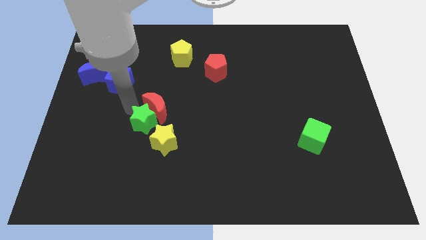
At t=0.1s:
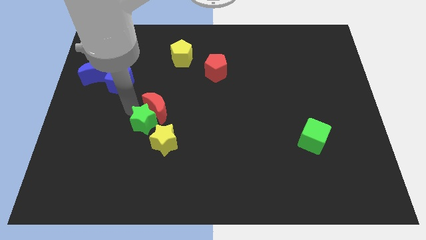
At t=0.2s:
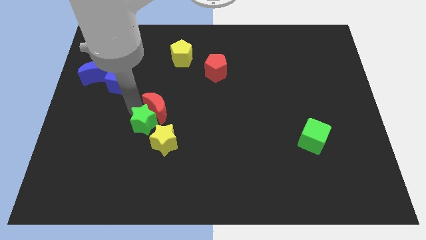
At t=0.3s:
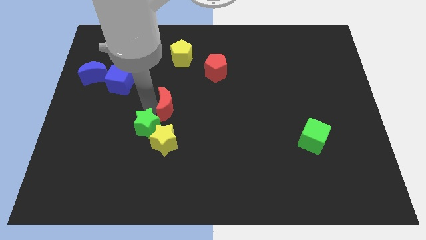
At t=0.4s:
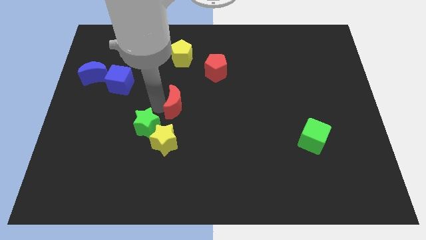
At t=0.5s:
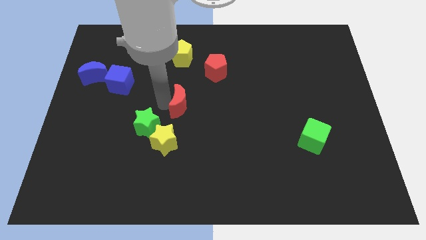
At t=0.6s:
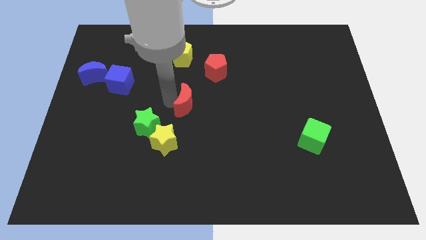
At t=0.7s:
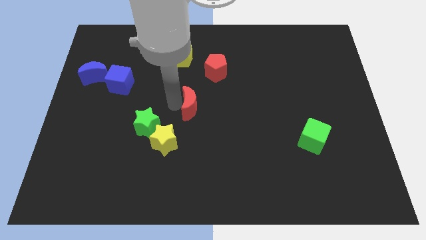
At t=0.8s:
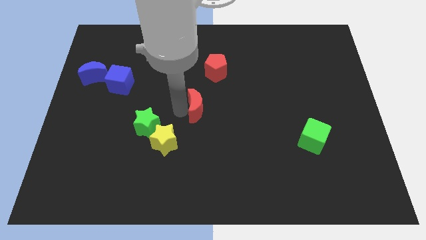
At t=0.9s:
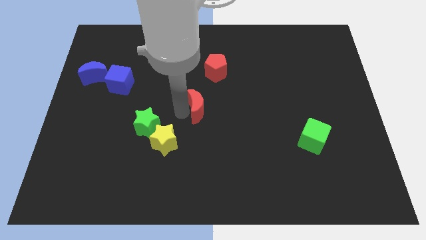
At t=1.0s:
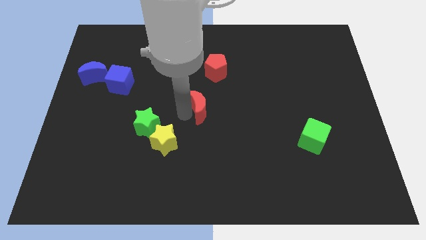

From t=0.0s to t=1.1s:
push the red crescent slightly to the right

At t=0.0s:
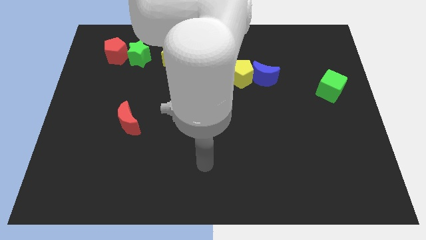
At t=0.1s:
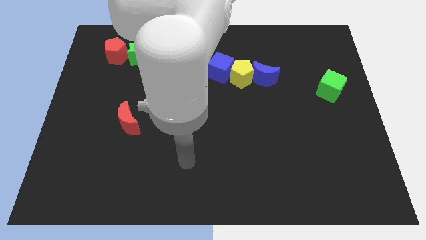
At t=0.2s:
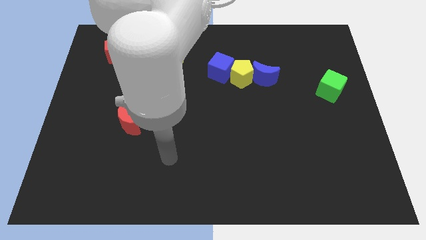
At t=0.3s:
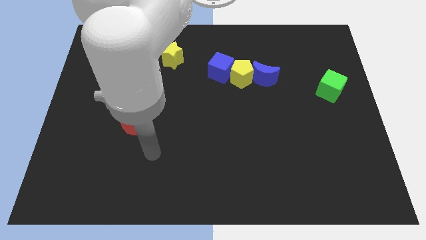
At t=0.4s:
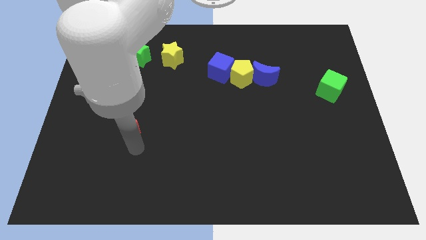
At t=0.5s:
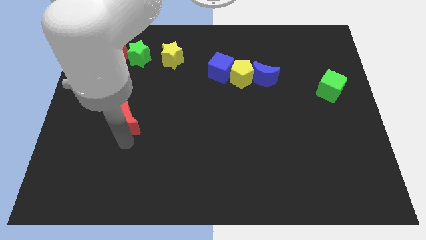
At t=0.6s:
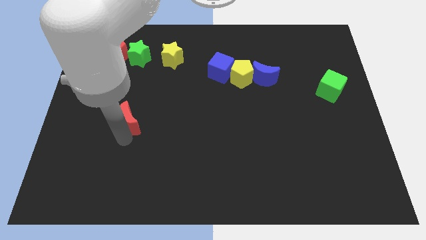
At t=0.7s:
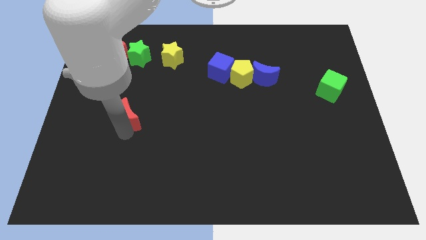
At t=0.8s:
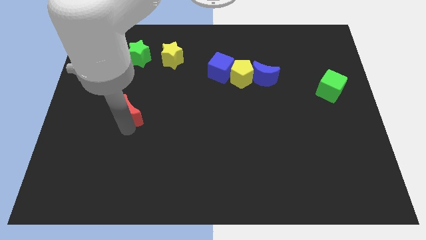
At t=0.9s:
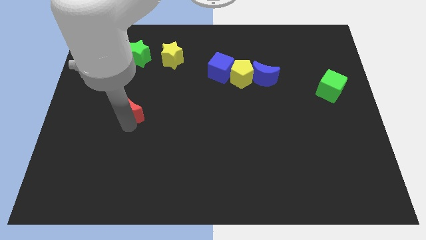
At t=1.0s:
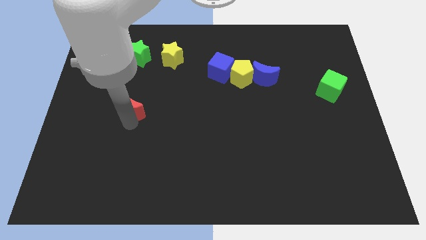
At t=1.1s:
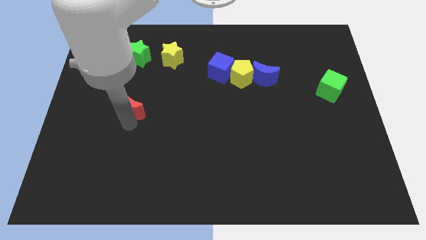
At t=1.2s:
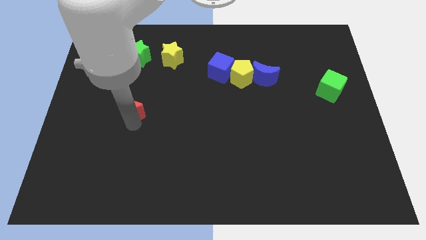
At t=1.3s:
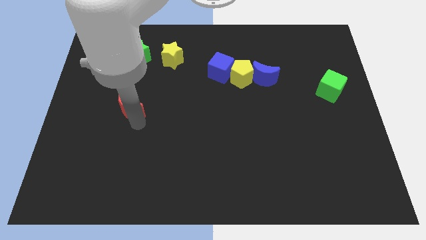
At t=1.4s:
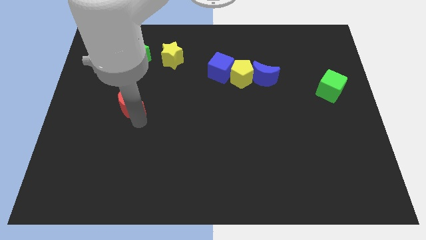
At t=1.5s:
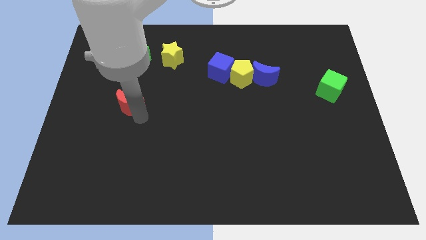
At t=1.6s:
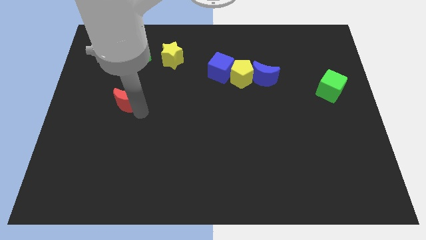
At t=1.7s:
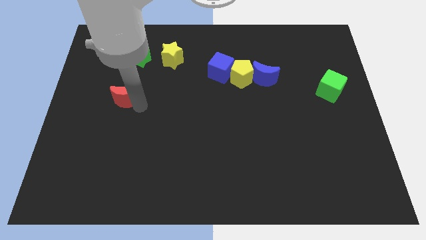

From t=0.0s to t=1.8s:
push the red moon slightly to the top of the board

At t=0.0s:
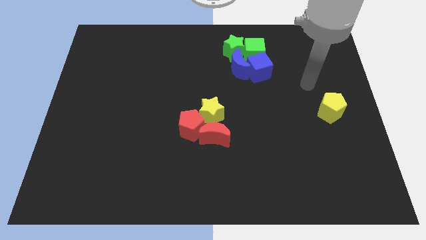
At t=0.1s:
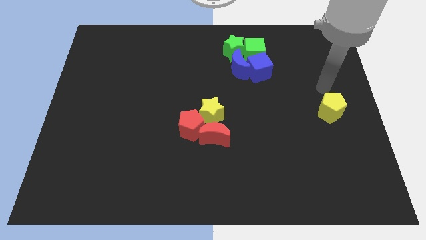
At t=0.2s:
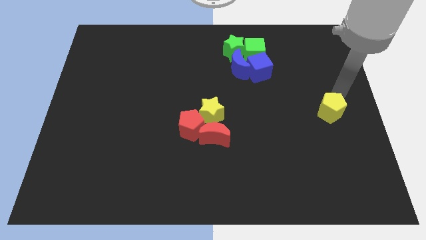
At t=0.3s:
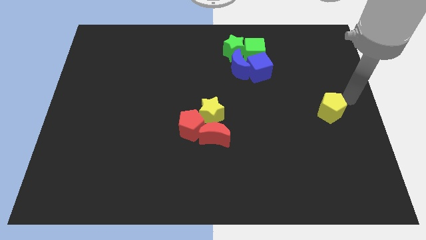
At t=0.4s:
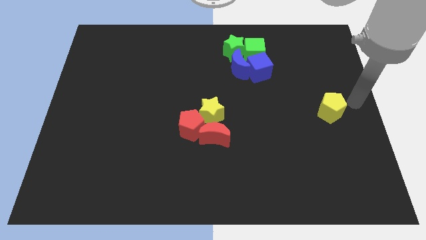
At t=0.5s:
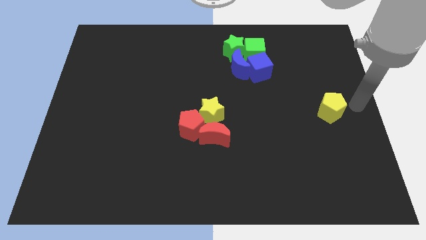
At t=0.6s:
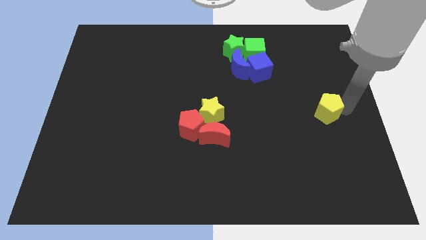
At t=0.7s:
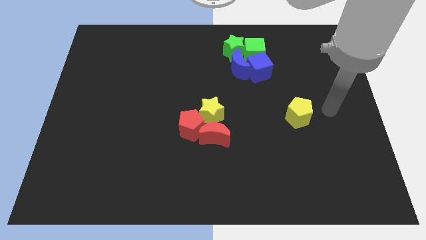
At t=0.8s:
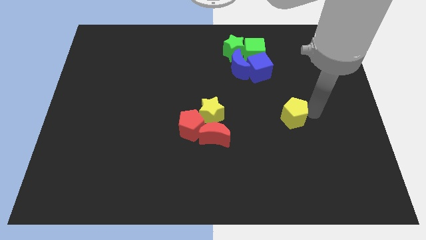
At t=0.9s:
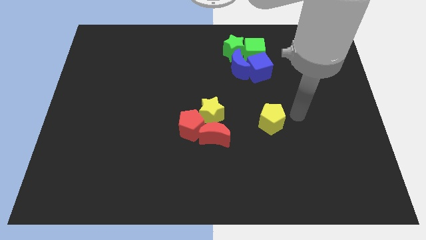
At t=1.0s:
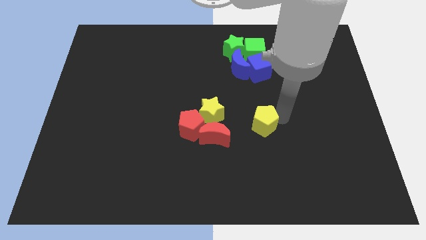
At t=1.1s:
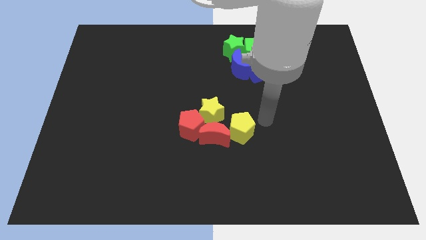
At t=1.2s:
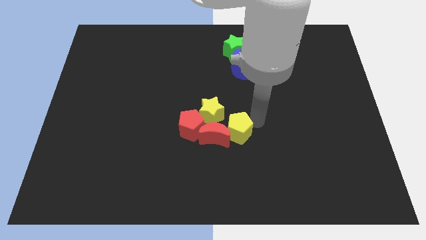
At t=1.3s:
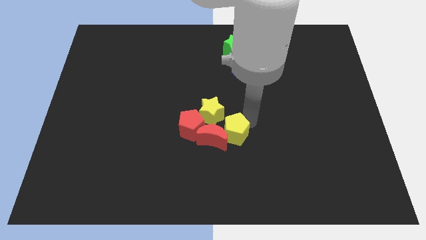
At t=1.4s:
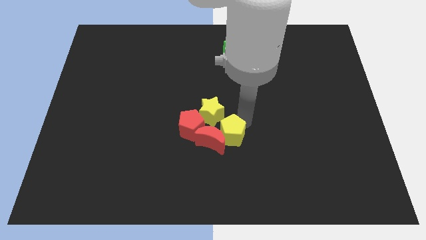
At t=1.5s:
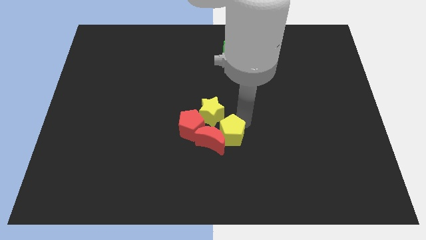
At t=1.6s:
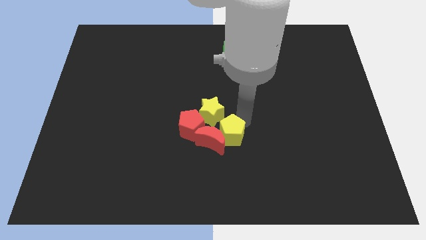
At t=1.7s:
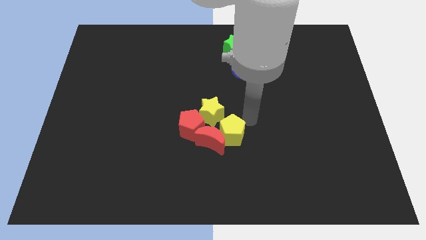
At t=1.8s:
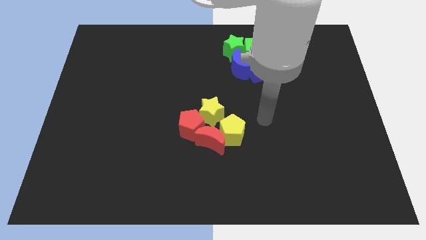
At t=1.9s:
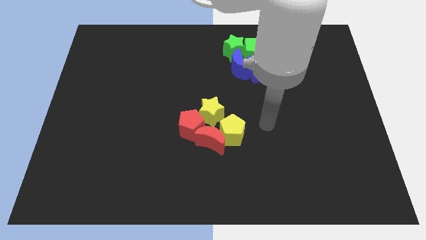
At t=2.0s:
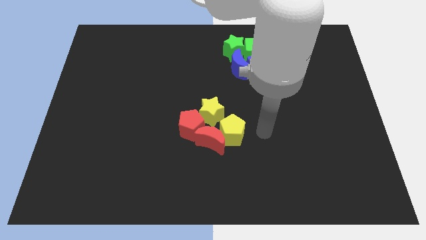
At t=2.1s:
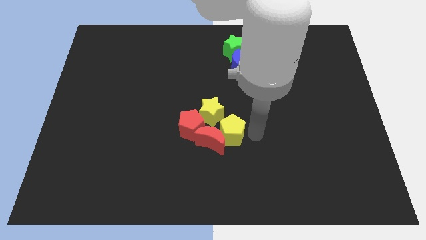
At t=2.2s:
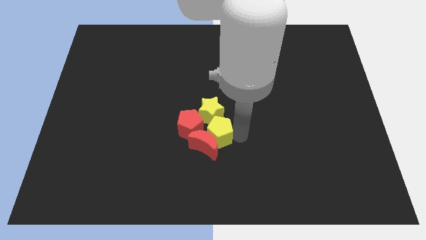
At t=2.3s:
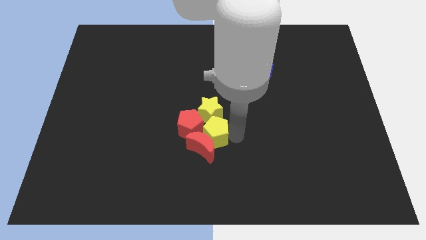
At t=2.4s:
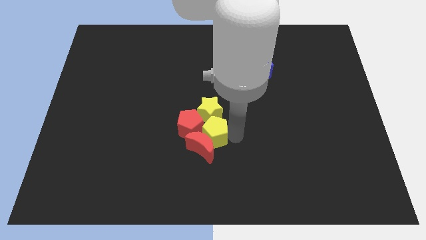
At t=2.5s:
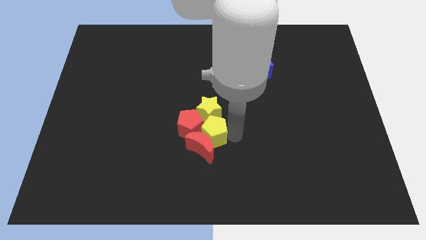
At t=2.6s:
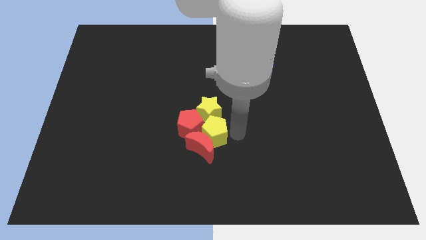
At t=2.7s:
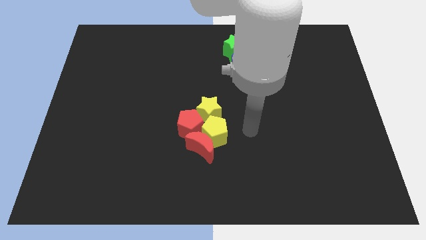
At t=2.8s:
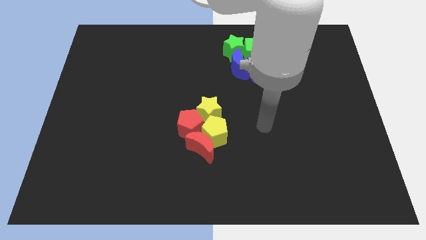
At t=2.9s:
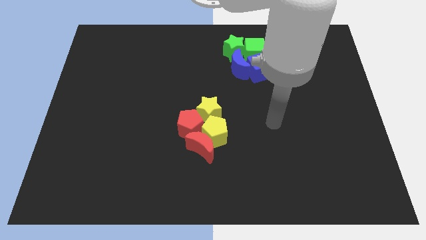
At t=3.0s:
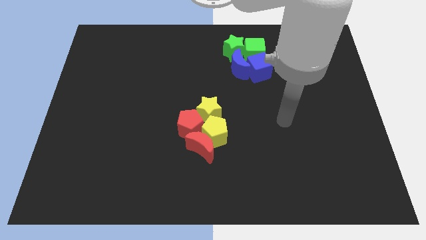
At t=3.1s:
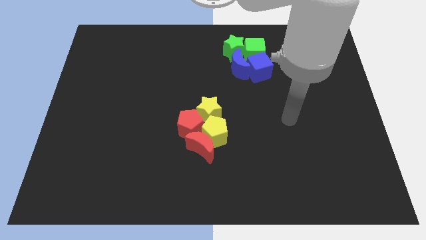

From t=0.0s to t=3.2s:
push the yellow pentagon to the bottom of the yellow star

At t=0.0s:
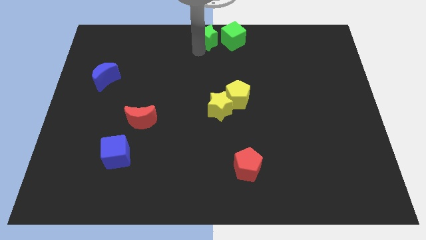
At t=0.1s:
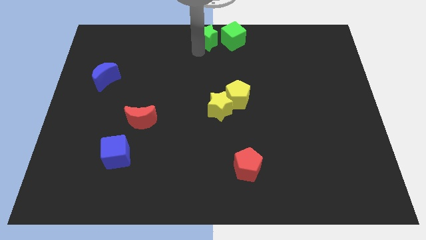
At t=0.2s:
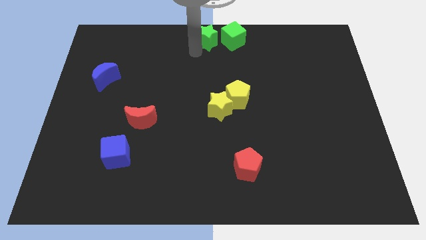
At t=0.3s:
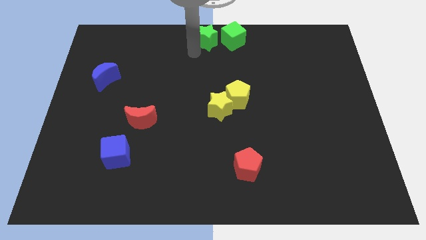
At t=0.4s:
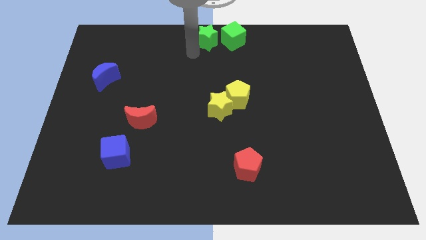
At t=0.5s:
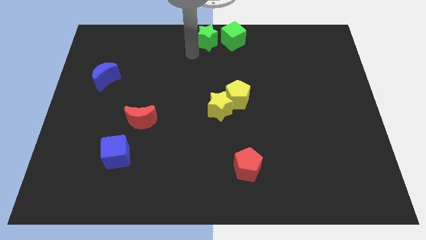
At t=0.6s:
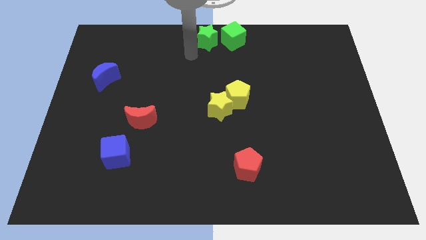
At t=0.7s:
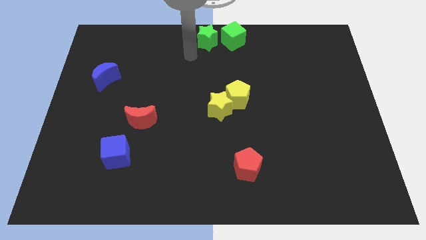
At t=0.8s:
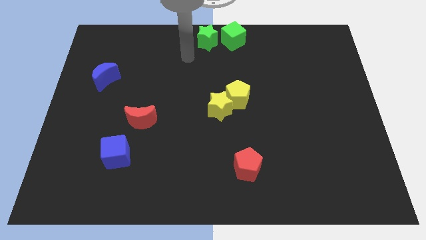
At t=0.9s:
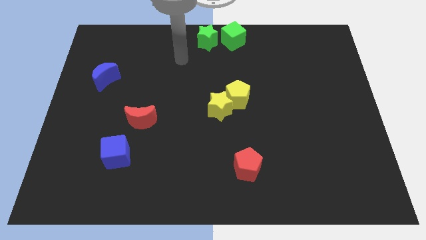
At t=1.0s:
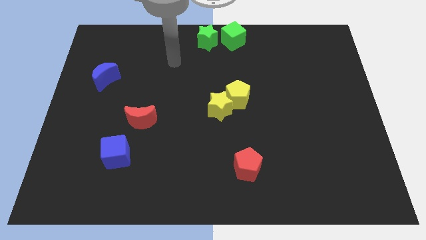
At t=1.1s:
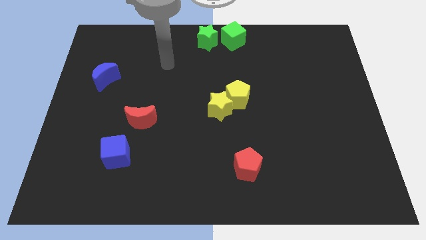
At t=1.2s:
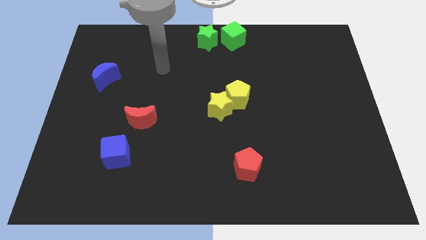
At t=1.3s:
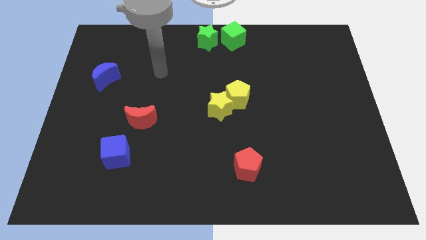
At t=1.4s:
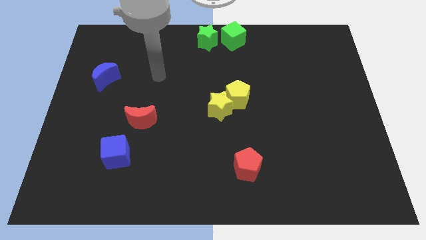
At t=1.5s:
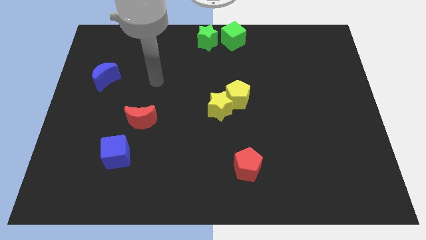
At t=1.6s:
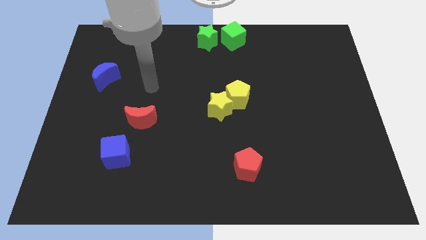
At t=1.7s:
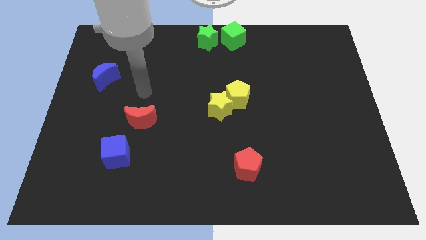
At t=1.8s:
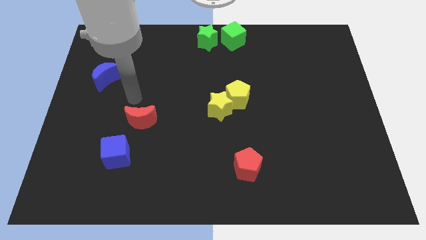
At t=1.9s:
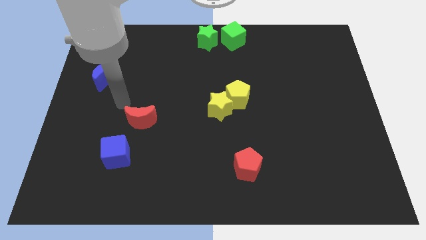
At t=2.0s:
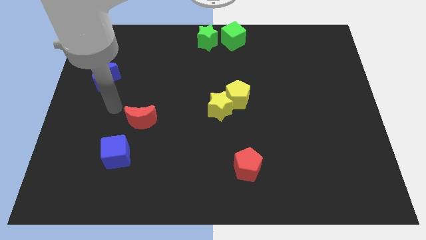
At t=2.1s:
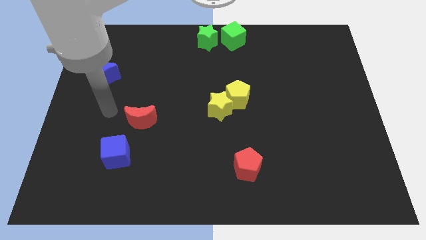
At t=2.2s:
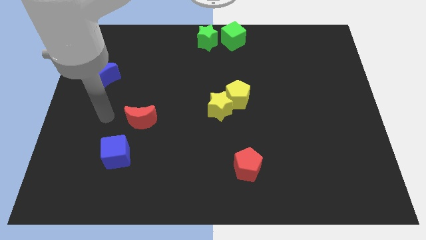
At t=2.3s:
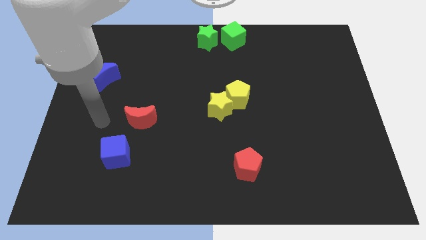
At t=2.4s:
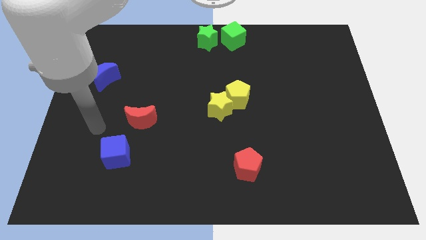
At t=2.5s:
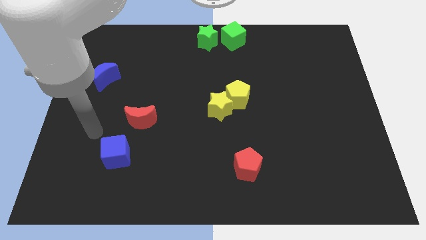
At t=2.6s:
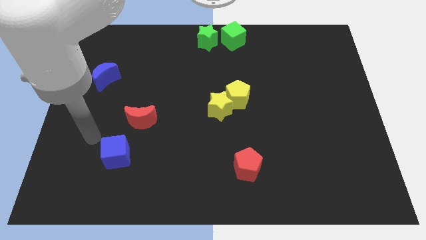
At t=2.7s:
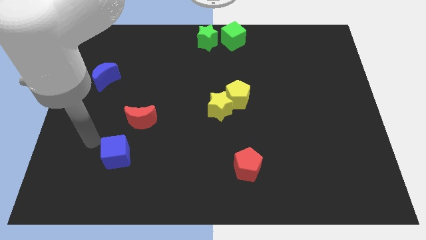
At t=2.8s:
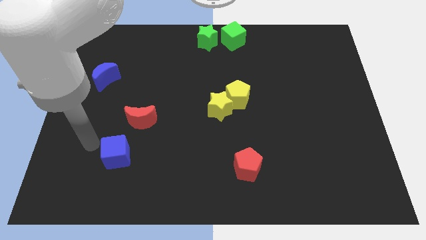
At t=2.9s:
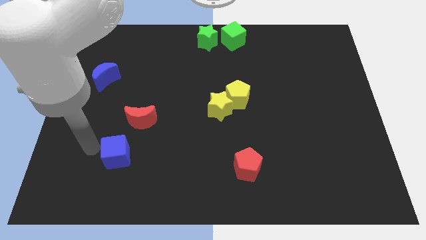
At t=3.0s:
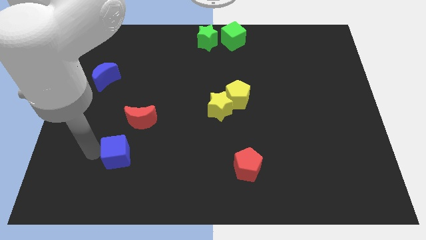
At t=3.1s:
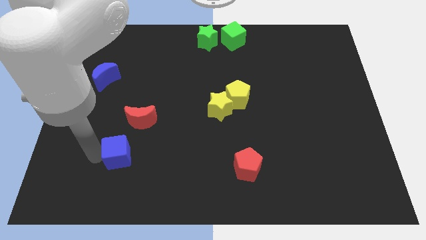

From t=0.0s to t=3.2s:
move the hand at the left of the blue cube
